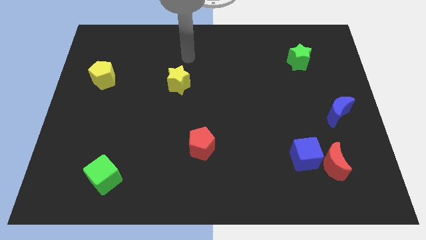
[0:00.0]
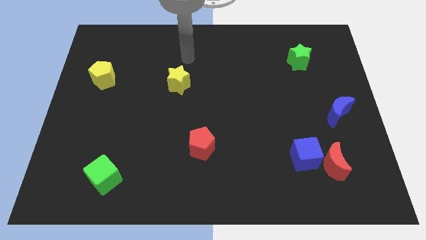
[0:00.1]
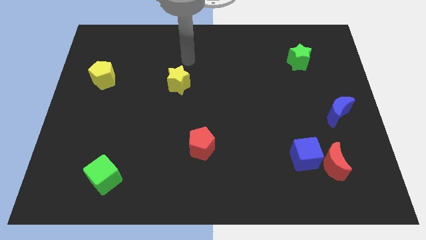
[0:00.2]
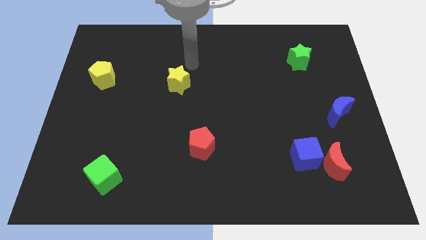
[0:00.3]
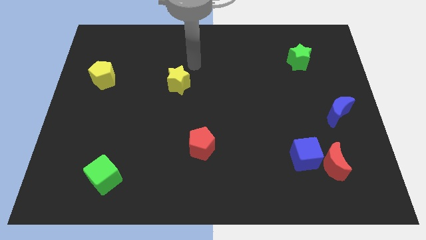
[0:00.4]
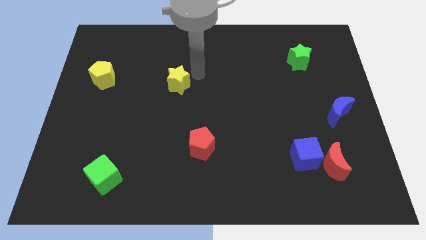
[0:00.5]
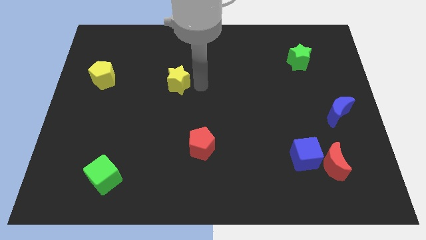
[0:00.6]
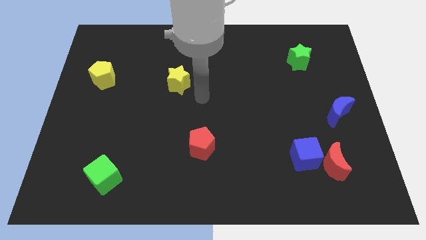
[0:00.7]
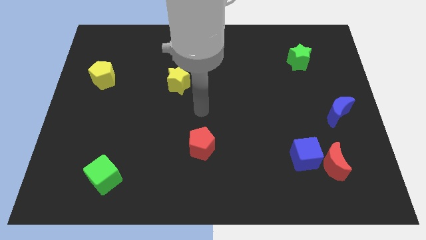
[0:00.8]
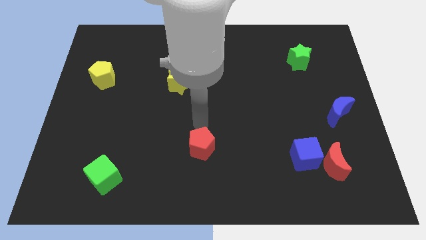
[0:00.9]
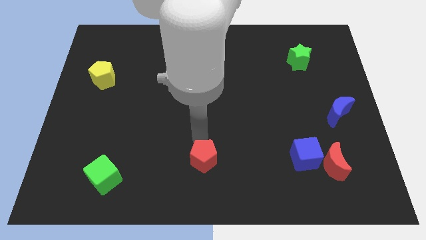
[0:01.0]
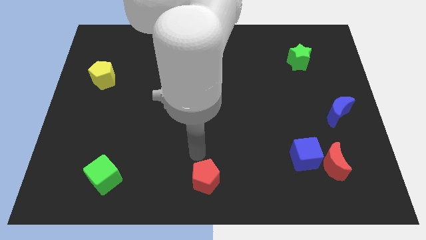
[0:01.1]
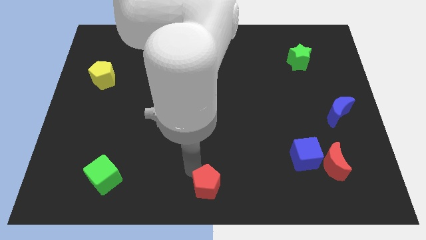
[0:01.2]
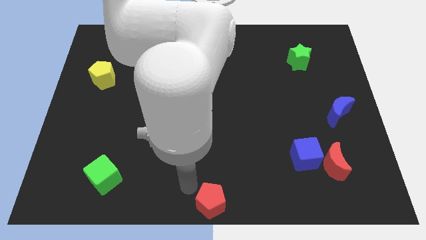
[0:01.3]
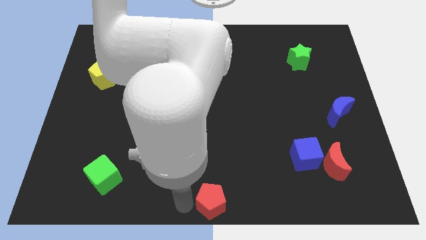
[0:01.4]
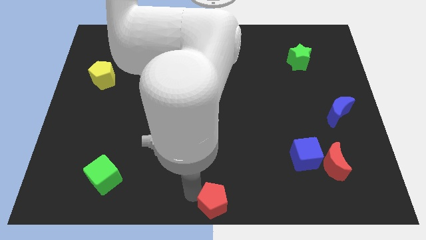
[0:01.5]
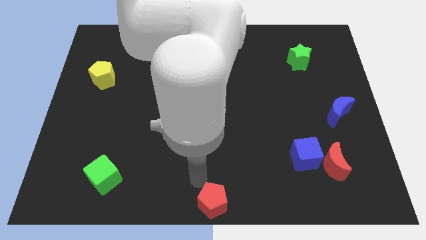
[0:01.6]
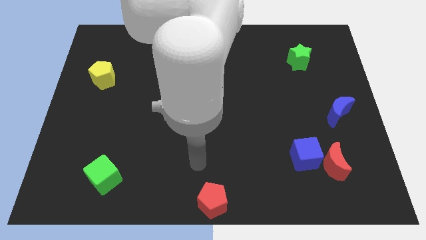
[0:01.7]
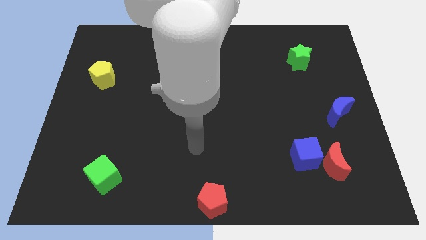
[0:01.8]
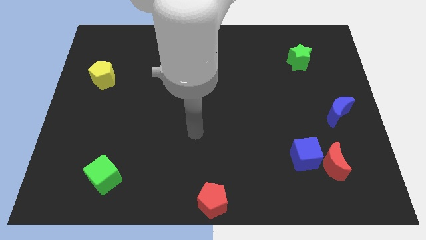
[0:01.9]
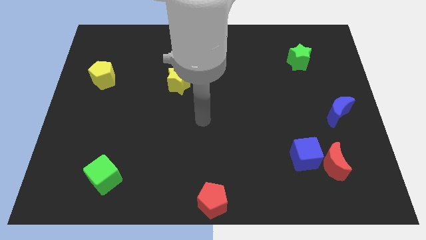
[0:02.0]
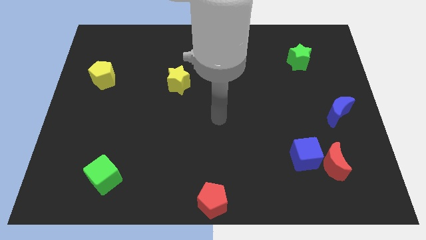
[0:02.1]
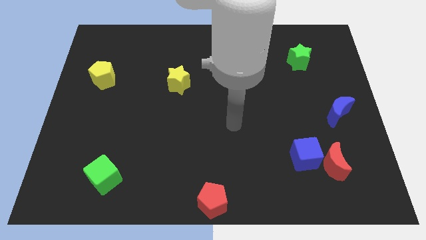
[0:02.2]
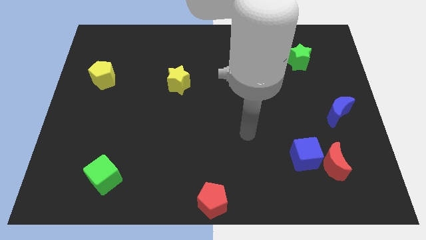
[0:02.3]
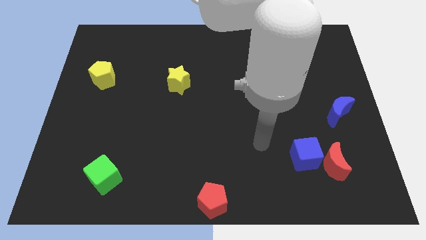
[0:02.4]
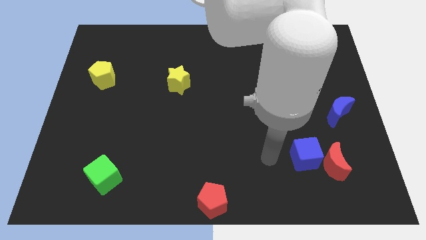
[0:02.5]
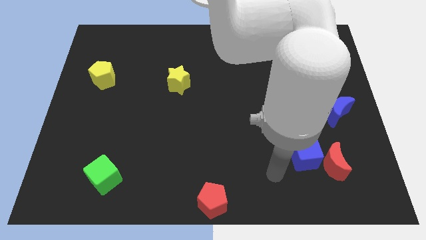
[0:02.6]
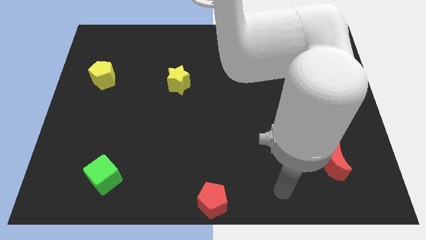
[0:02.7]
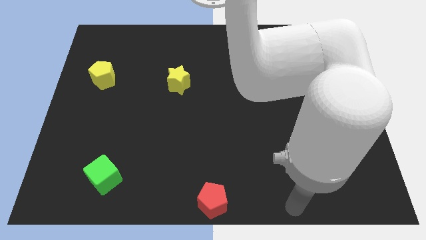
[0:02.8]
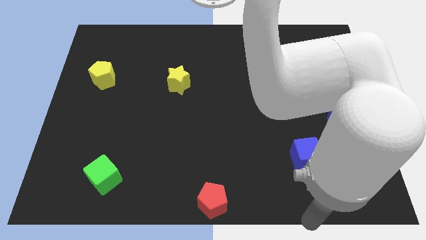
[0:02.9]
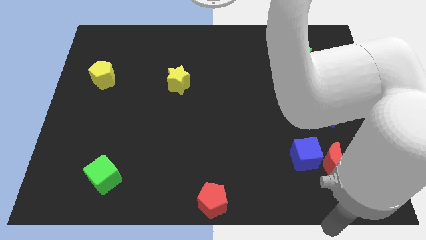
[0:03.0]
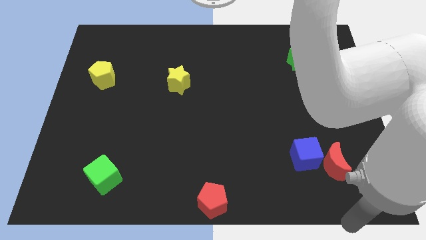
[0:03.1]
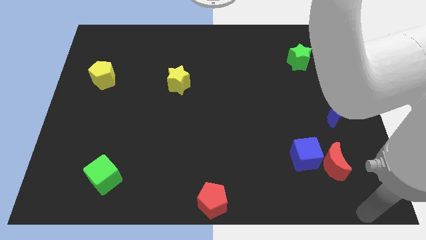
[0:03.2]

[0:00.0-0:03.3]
push the red pentagon towards the bottom center

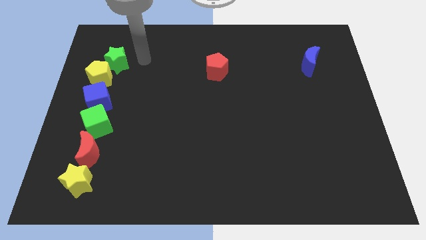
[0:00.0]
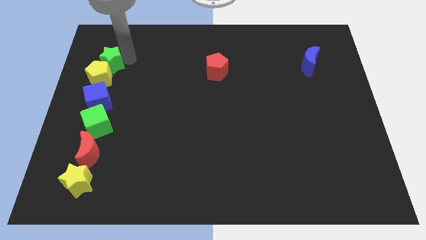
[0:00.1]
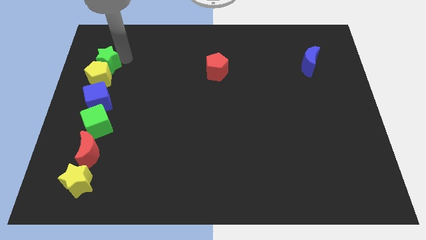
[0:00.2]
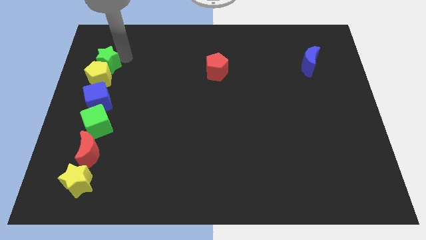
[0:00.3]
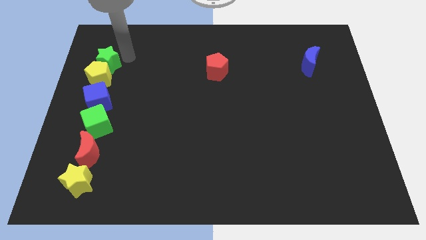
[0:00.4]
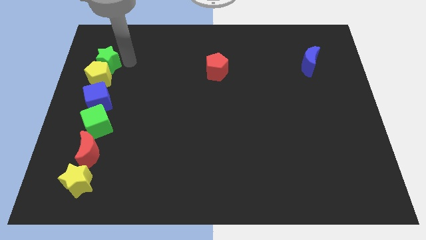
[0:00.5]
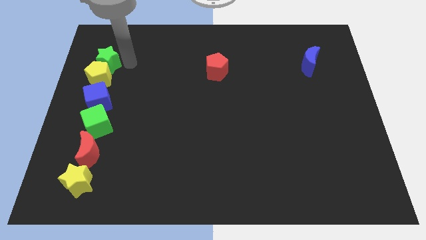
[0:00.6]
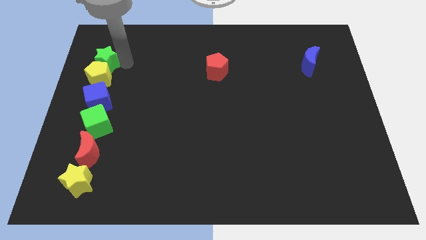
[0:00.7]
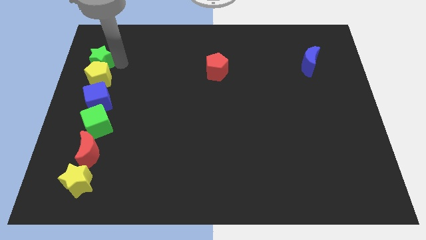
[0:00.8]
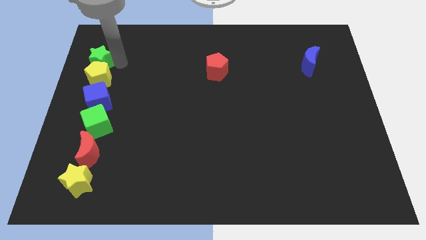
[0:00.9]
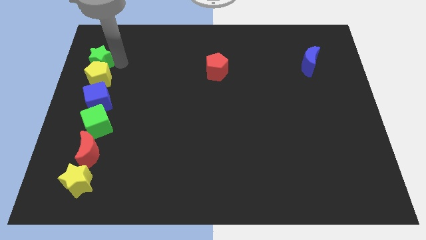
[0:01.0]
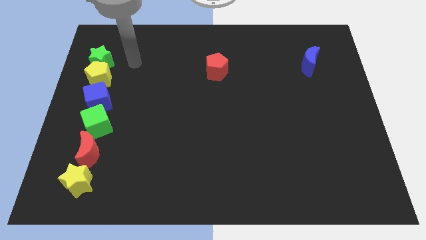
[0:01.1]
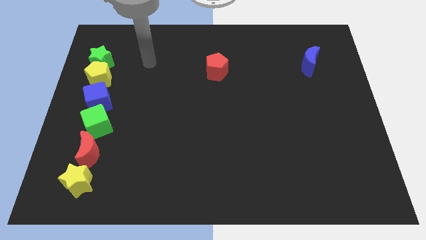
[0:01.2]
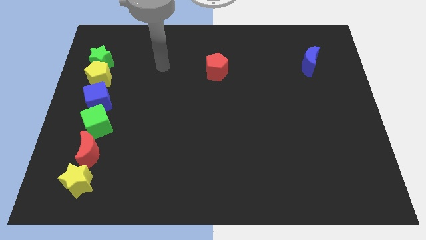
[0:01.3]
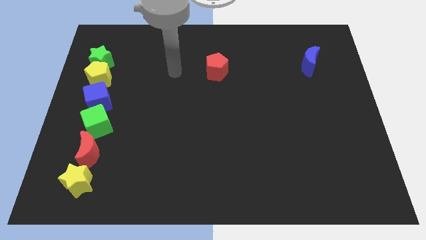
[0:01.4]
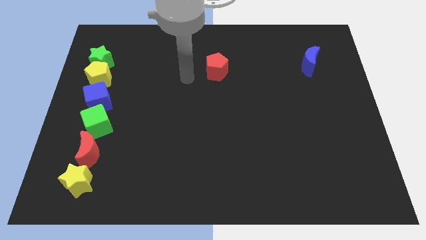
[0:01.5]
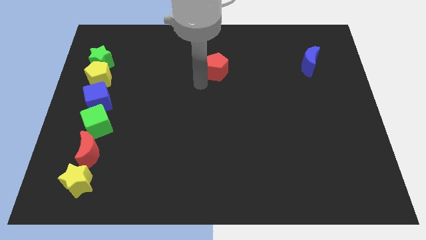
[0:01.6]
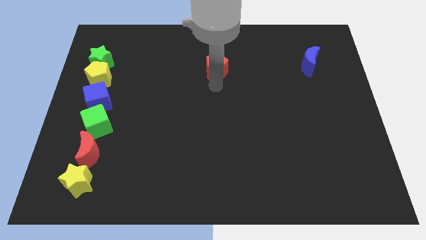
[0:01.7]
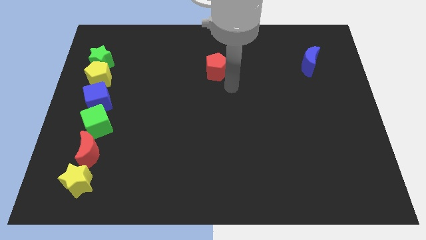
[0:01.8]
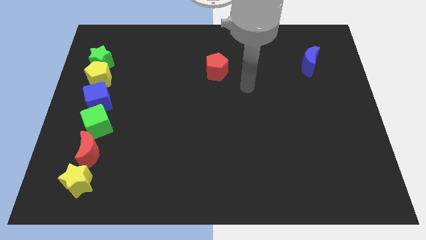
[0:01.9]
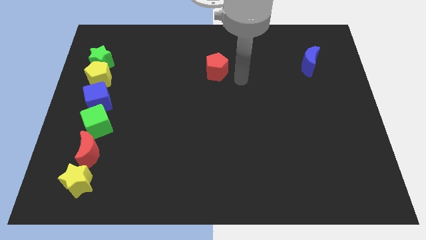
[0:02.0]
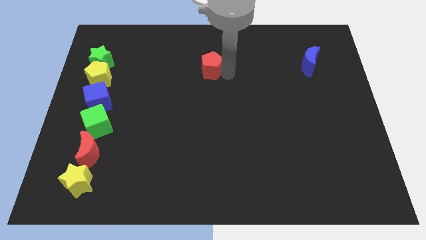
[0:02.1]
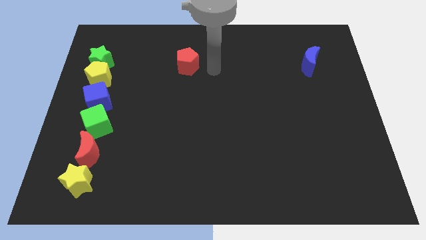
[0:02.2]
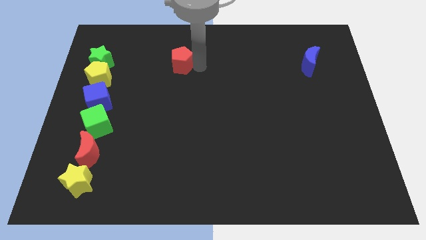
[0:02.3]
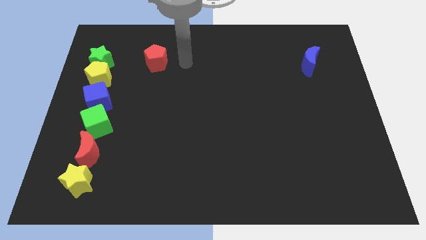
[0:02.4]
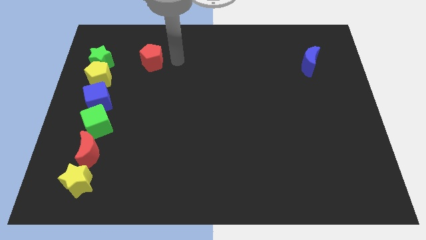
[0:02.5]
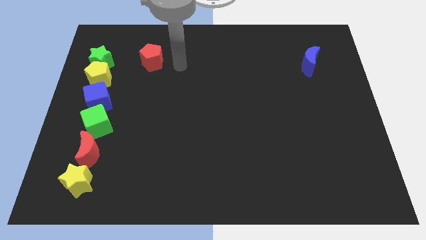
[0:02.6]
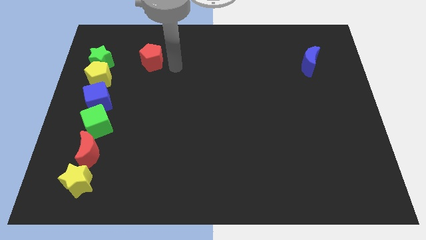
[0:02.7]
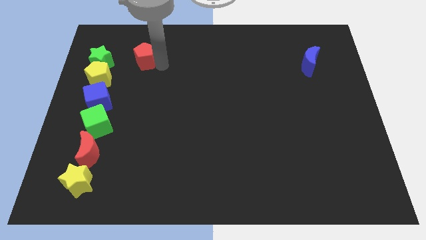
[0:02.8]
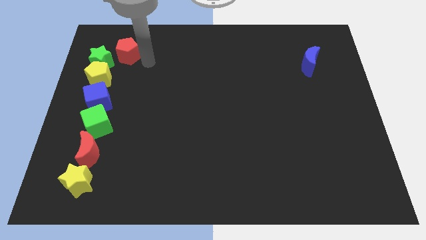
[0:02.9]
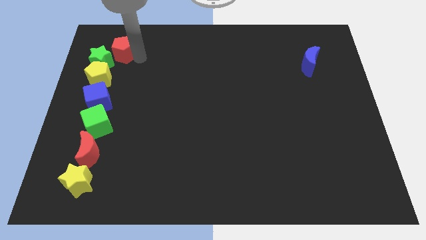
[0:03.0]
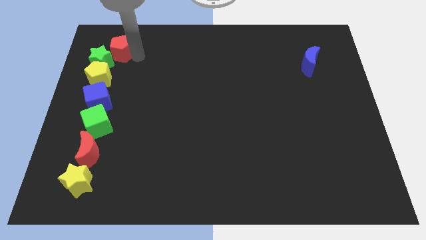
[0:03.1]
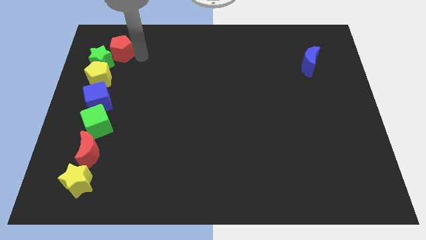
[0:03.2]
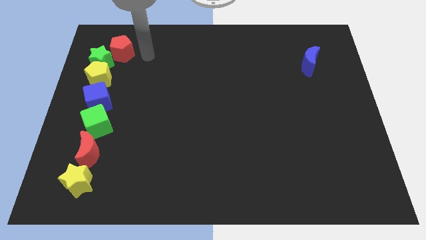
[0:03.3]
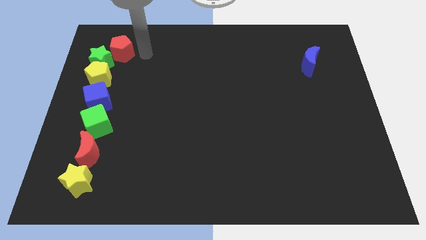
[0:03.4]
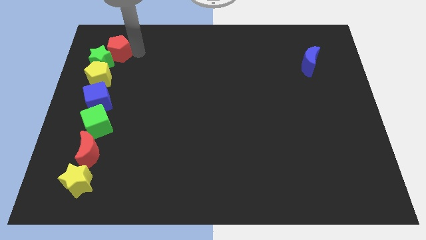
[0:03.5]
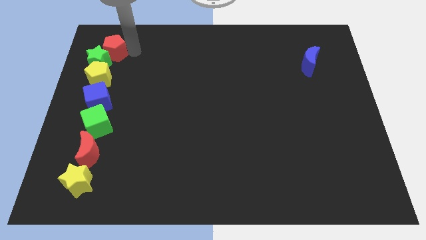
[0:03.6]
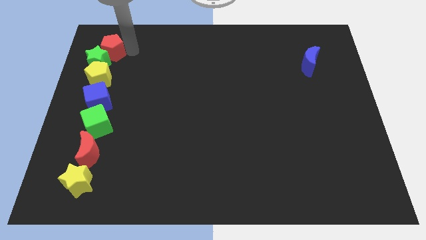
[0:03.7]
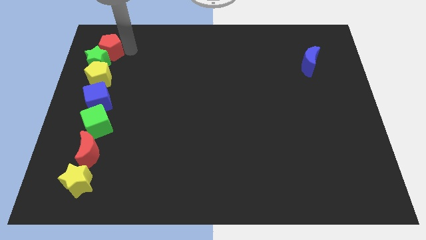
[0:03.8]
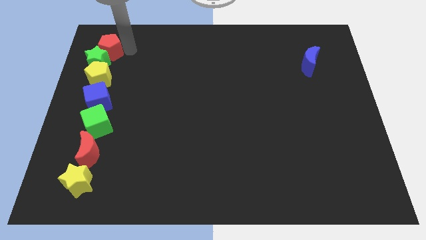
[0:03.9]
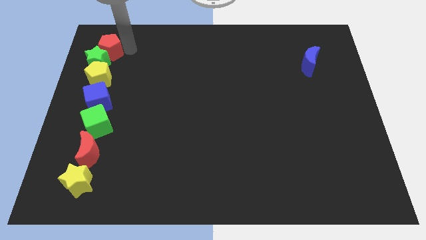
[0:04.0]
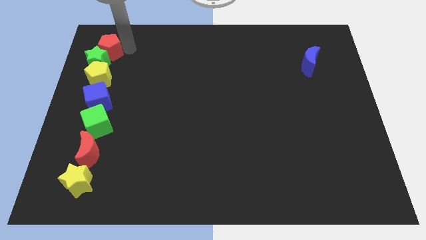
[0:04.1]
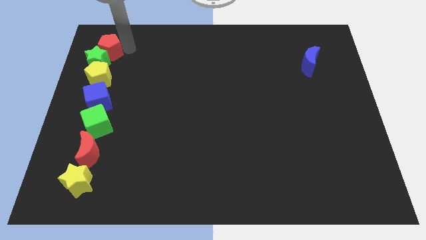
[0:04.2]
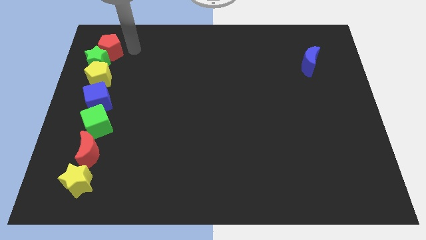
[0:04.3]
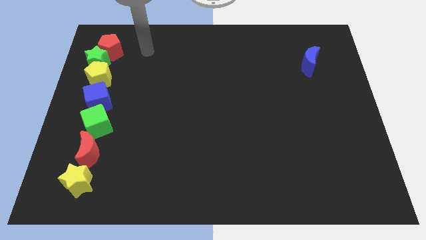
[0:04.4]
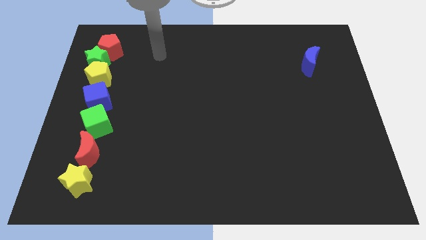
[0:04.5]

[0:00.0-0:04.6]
push the red pentagon towards the top left corner of the board

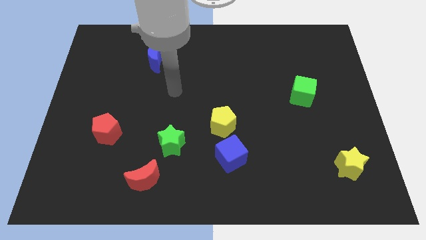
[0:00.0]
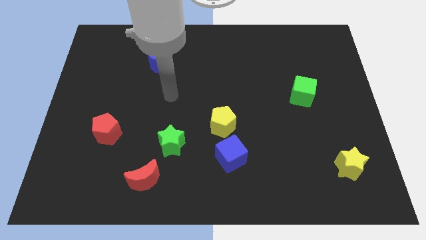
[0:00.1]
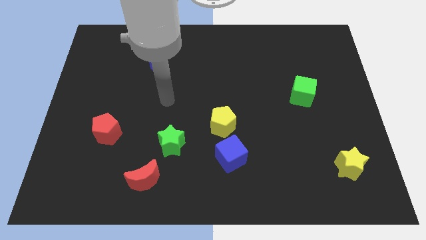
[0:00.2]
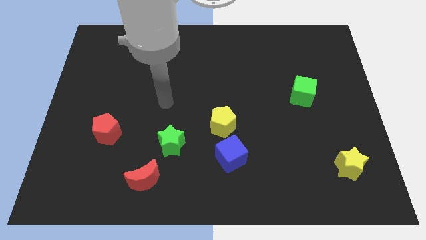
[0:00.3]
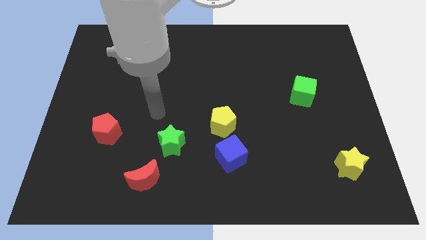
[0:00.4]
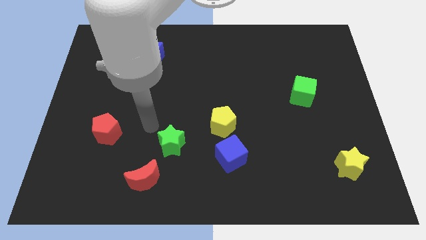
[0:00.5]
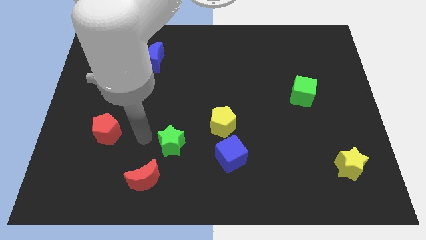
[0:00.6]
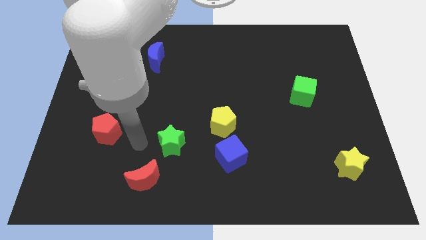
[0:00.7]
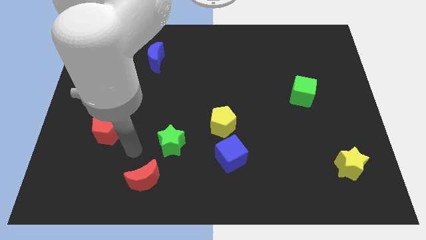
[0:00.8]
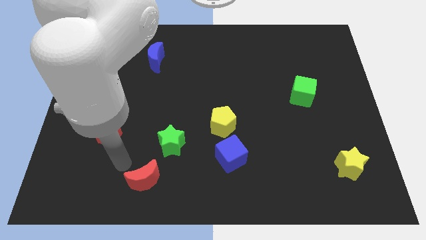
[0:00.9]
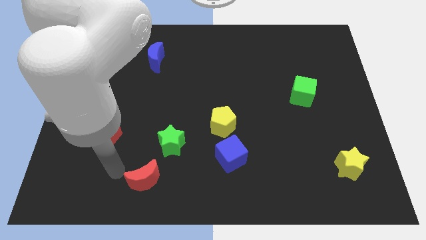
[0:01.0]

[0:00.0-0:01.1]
place your hand to the left of red moon
